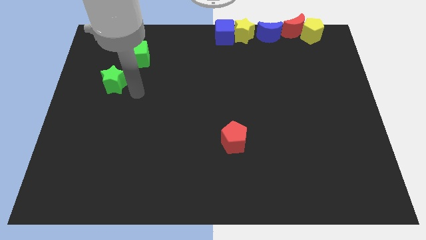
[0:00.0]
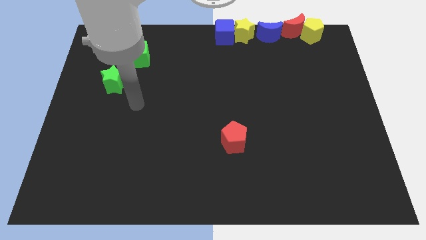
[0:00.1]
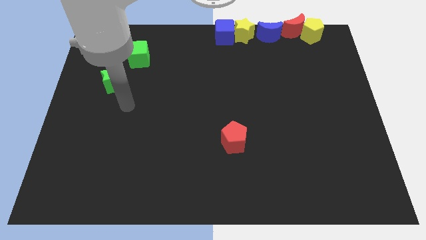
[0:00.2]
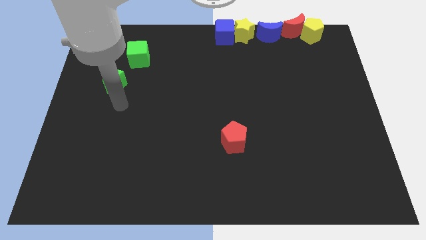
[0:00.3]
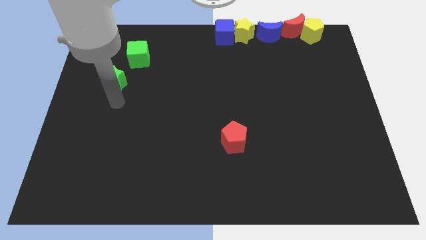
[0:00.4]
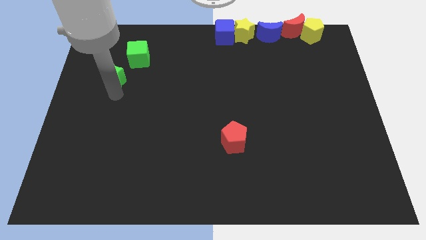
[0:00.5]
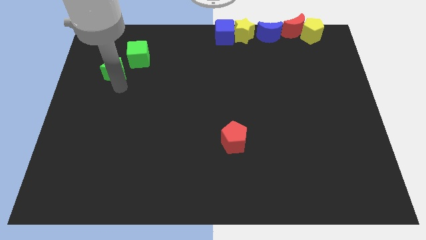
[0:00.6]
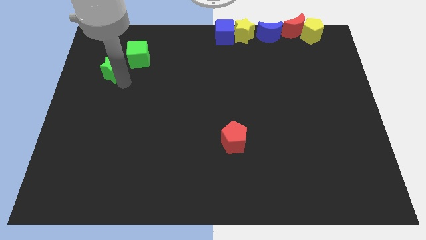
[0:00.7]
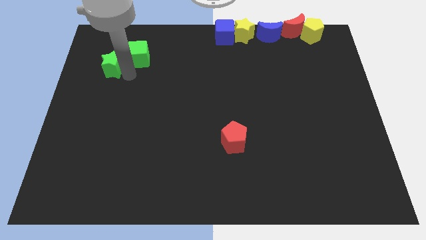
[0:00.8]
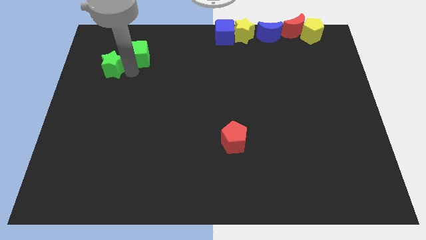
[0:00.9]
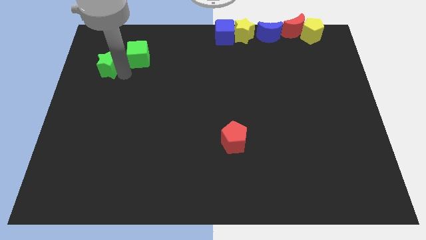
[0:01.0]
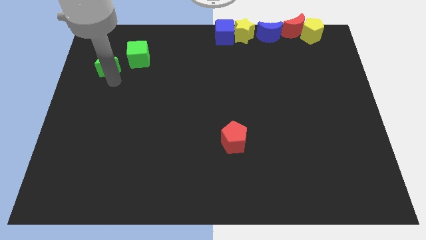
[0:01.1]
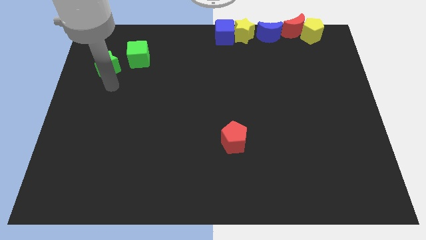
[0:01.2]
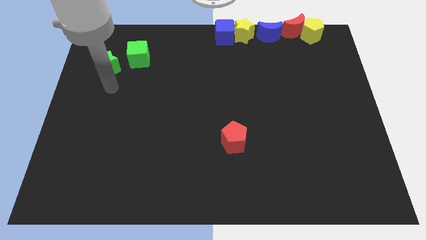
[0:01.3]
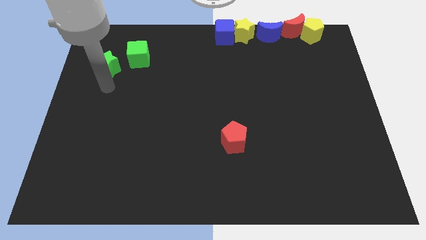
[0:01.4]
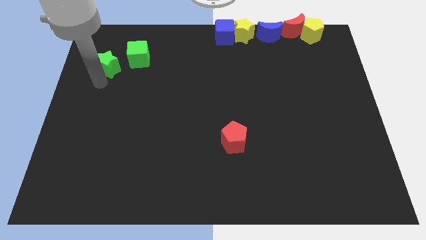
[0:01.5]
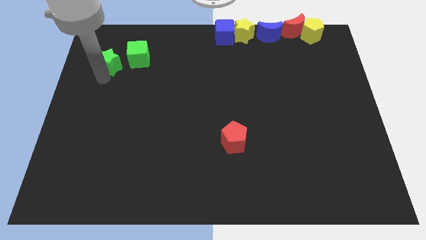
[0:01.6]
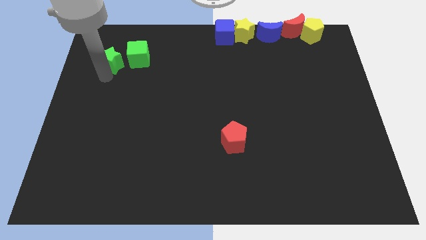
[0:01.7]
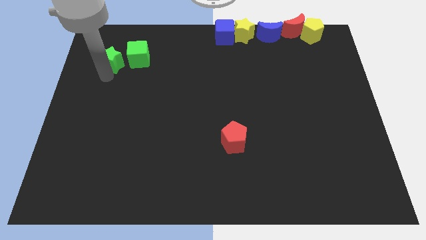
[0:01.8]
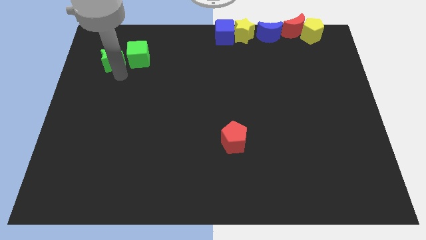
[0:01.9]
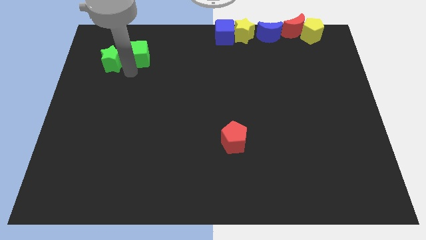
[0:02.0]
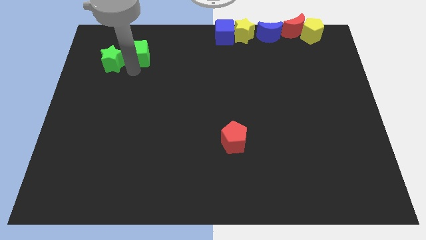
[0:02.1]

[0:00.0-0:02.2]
move the green star close to the green cube

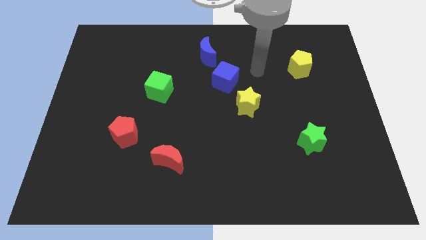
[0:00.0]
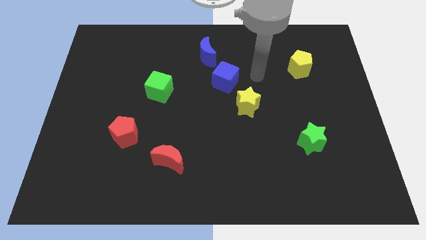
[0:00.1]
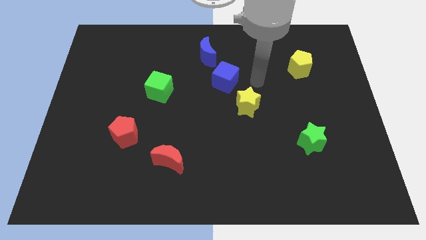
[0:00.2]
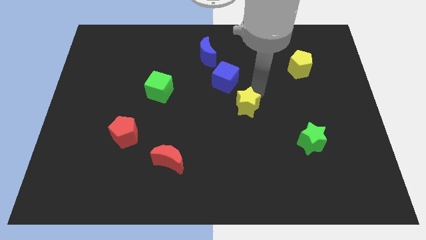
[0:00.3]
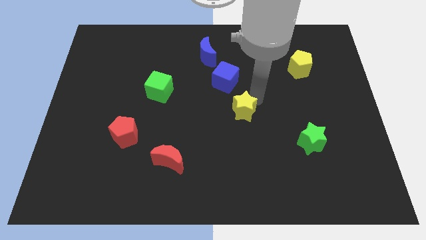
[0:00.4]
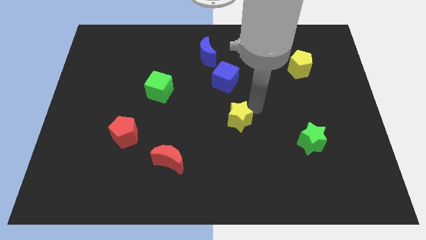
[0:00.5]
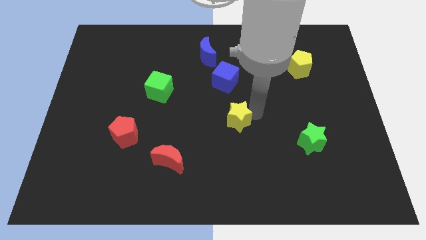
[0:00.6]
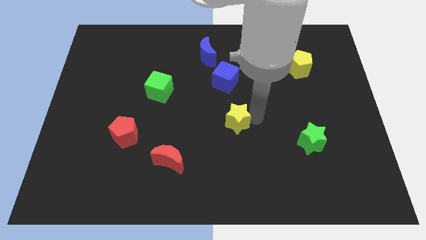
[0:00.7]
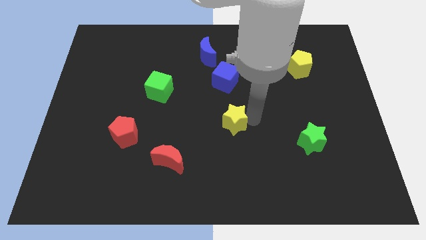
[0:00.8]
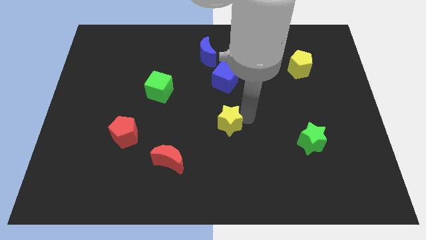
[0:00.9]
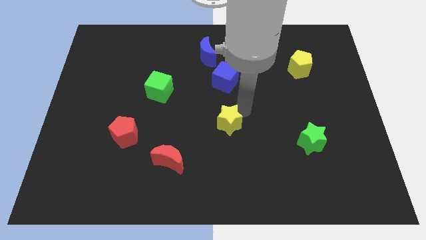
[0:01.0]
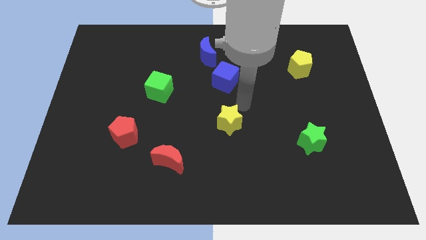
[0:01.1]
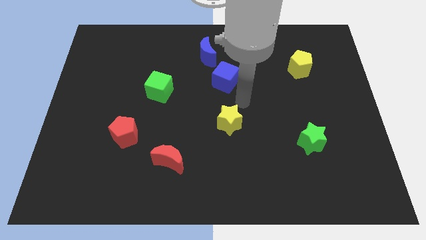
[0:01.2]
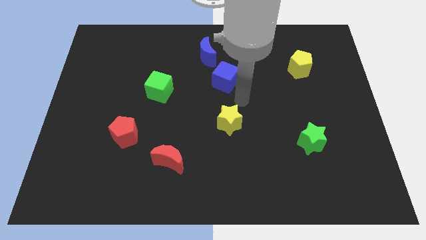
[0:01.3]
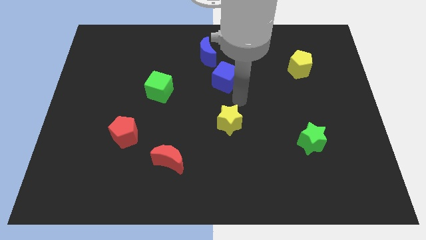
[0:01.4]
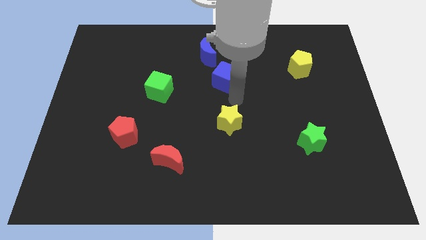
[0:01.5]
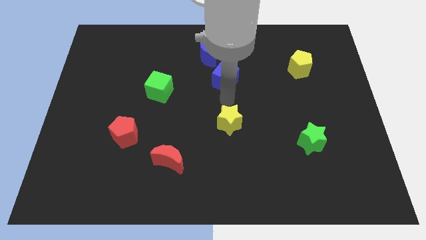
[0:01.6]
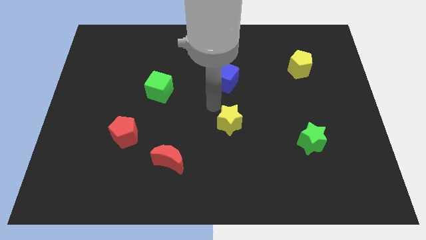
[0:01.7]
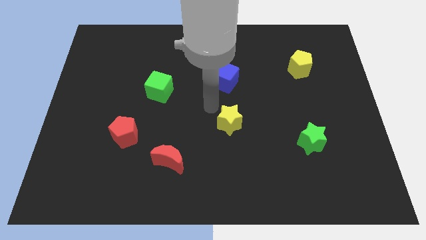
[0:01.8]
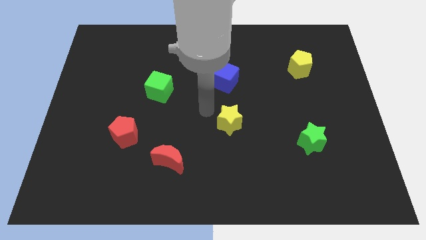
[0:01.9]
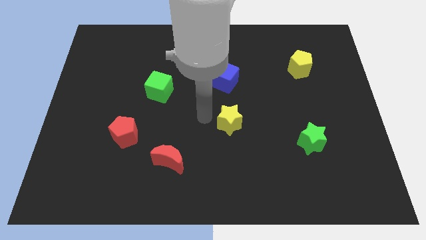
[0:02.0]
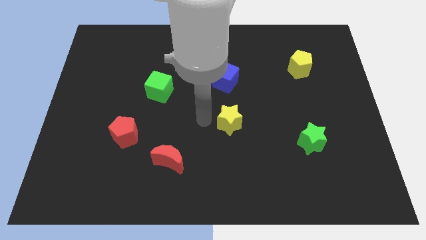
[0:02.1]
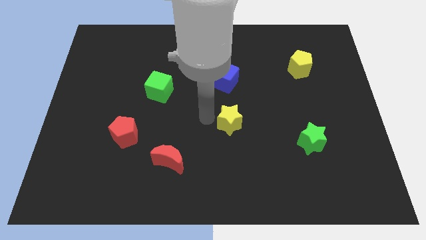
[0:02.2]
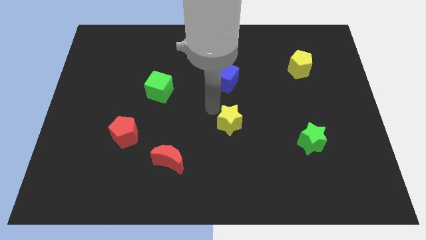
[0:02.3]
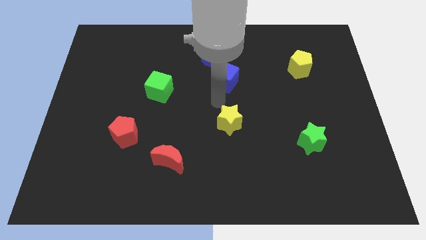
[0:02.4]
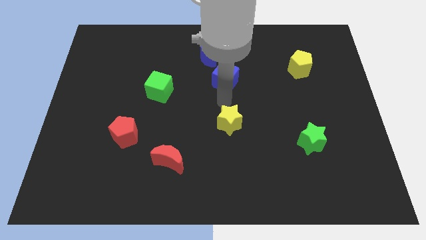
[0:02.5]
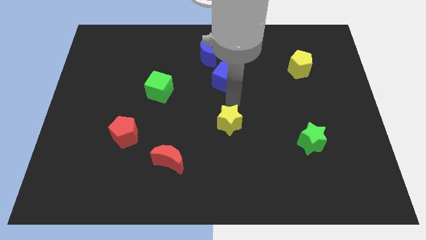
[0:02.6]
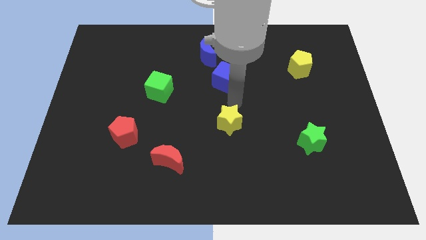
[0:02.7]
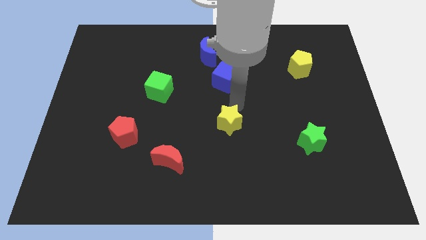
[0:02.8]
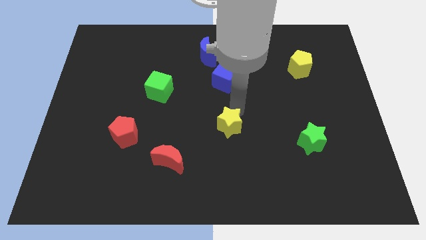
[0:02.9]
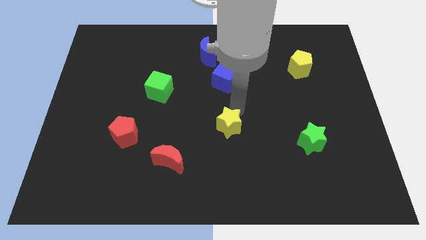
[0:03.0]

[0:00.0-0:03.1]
put the yellow star vertically below the bottom side of the blue cube

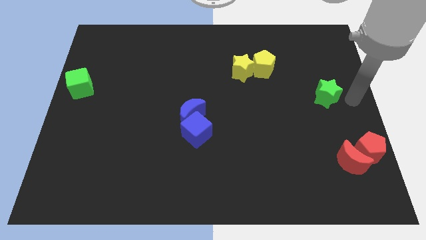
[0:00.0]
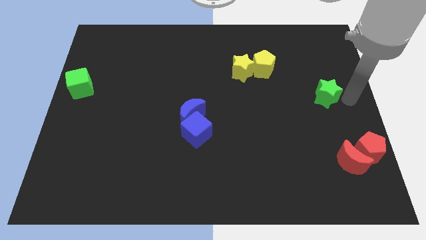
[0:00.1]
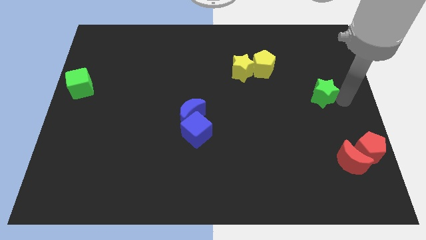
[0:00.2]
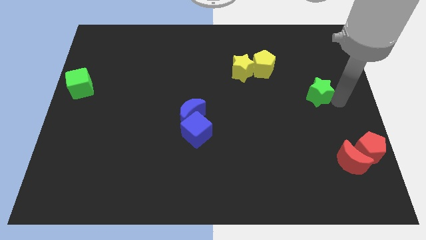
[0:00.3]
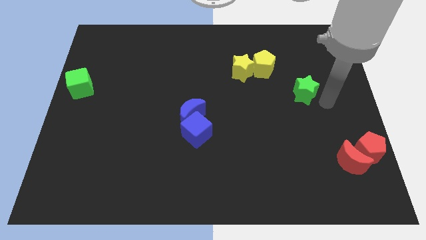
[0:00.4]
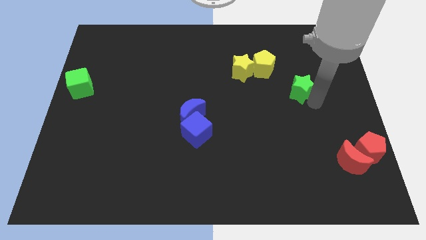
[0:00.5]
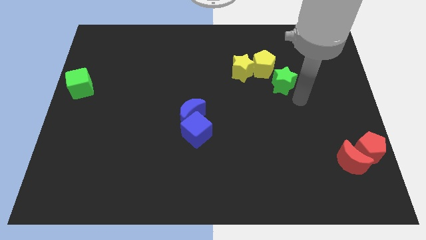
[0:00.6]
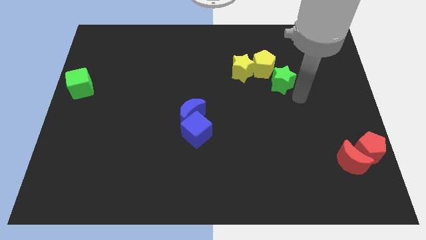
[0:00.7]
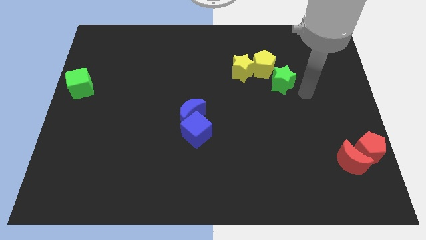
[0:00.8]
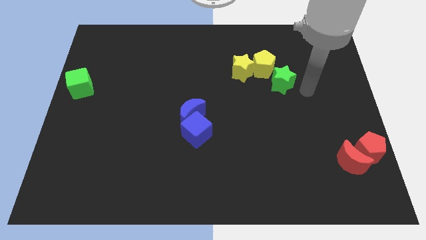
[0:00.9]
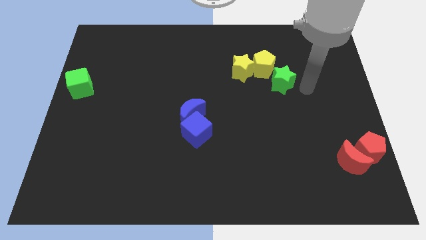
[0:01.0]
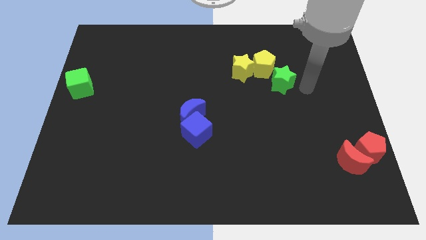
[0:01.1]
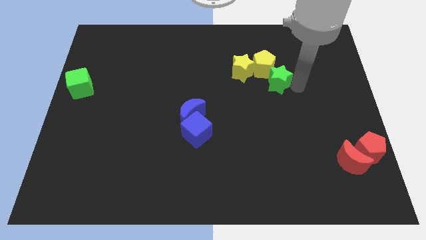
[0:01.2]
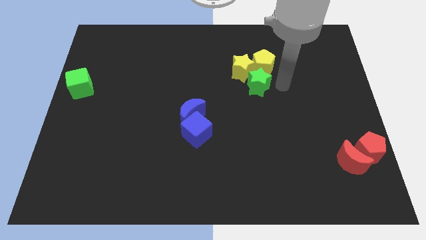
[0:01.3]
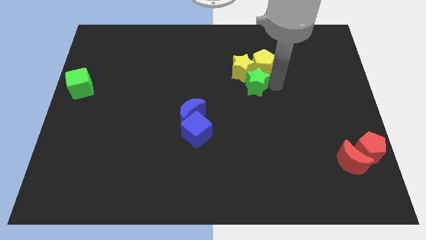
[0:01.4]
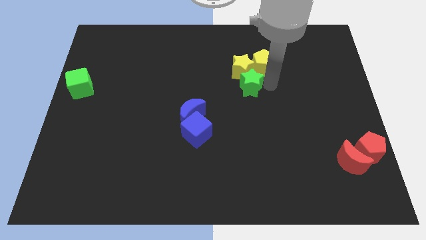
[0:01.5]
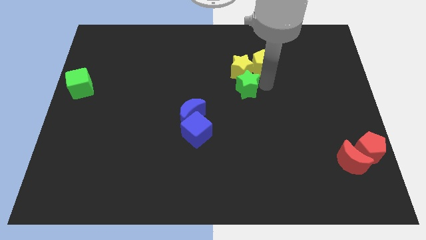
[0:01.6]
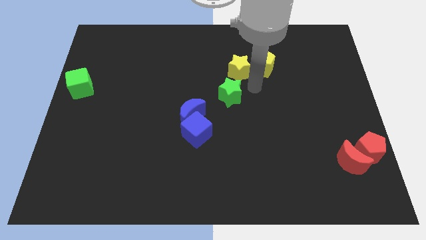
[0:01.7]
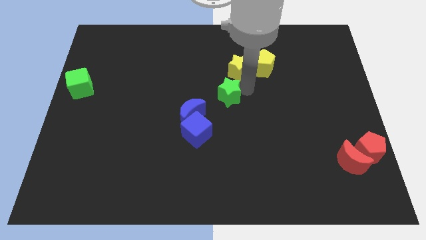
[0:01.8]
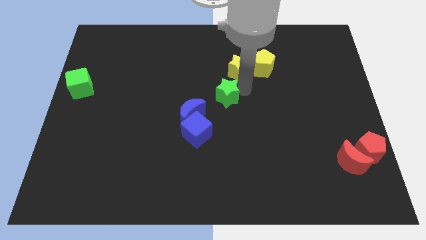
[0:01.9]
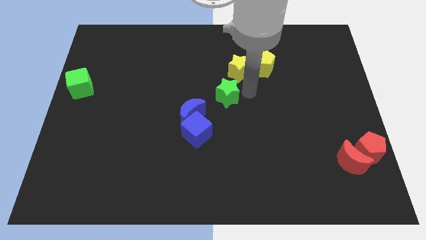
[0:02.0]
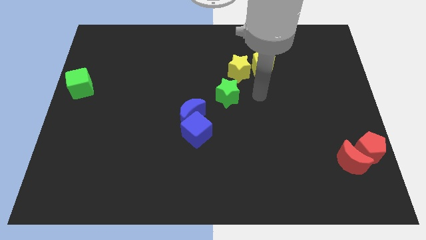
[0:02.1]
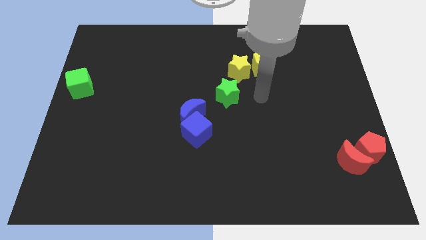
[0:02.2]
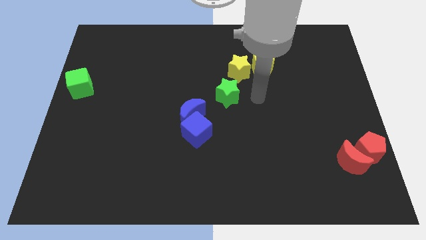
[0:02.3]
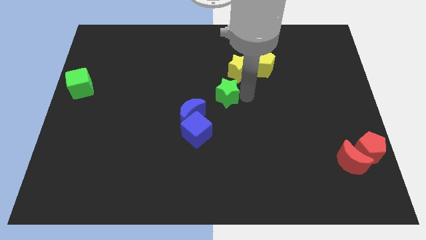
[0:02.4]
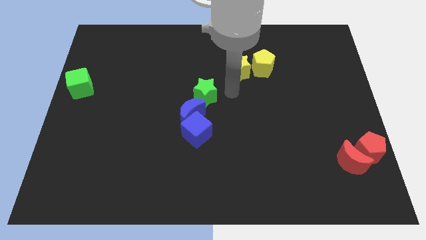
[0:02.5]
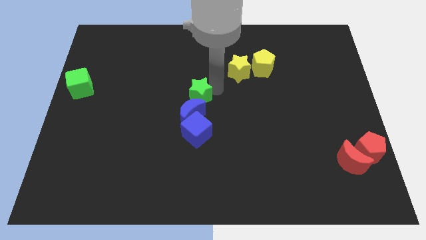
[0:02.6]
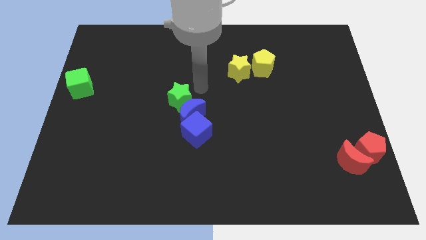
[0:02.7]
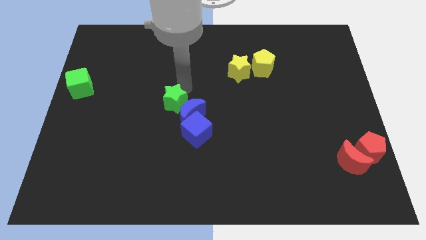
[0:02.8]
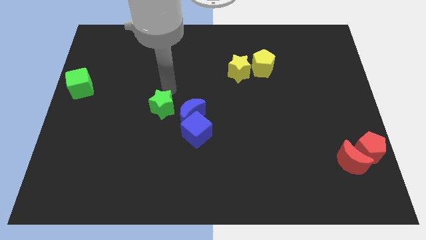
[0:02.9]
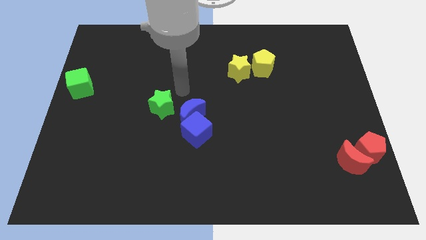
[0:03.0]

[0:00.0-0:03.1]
put the green star diagonally top left to blue moon

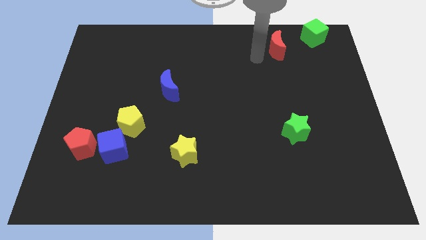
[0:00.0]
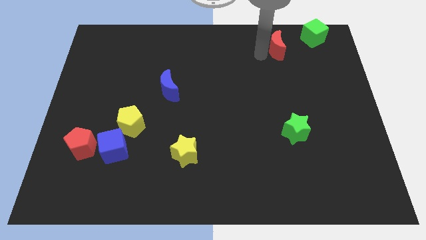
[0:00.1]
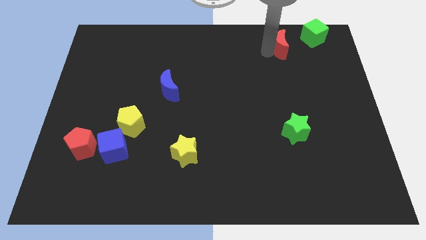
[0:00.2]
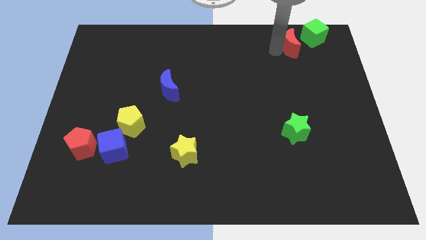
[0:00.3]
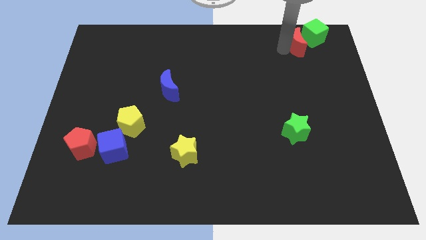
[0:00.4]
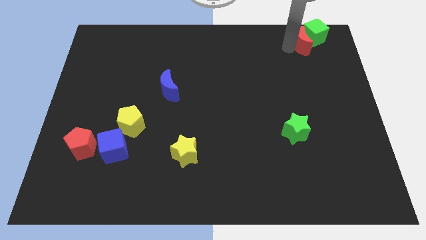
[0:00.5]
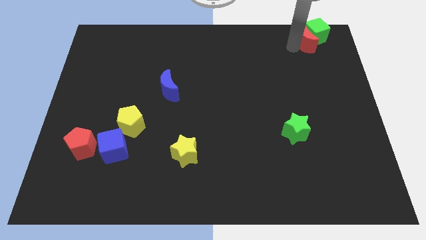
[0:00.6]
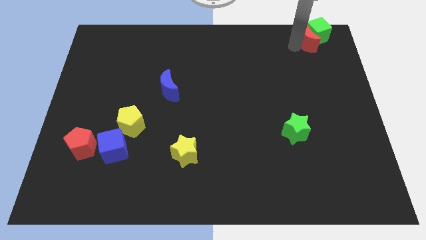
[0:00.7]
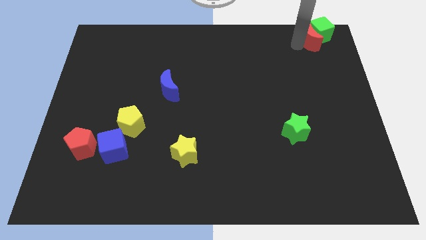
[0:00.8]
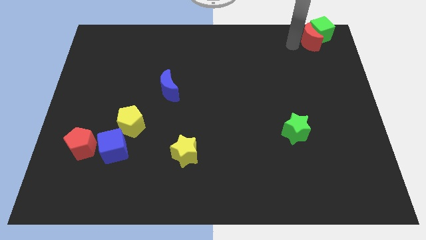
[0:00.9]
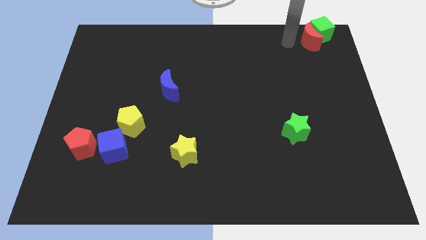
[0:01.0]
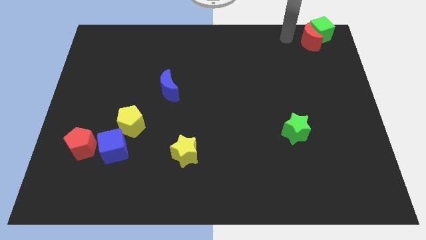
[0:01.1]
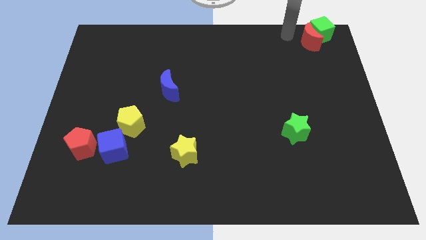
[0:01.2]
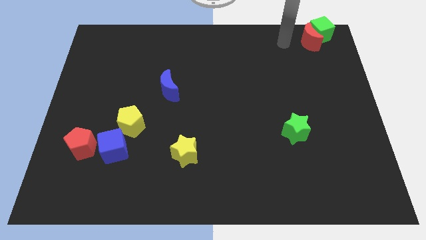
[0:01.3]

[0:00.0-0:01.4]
push the red crescent to the left of the green cube
